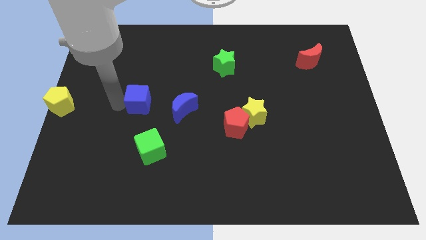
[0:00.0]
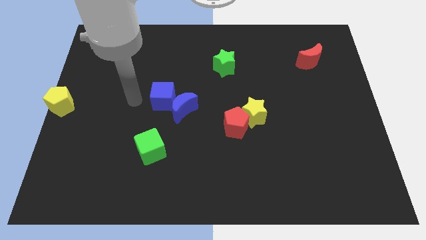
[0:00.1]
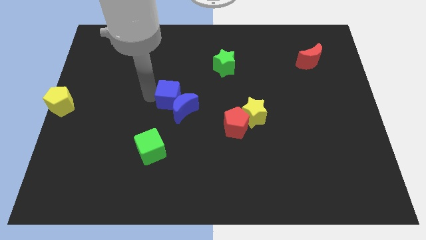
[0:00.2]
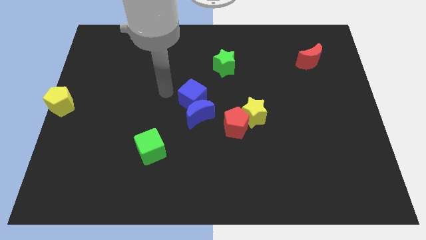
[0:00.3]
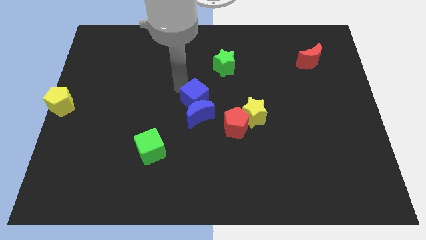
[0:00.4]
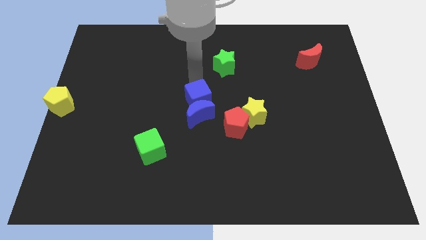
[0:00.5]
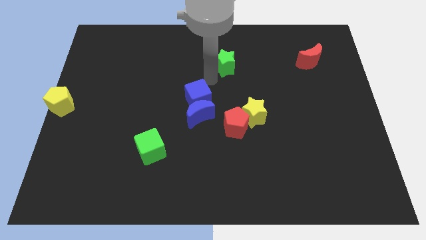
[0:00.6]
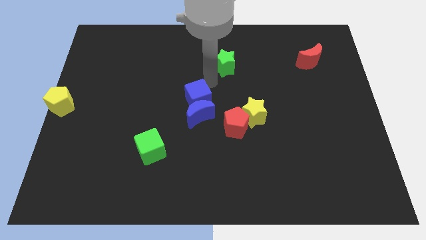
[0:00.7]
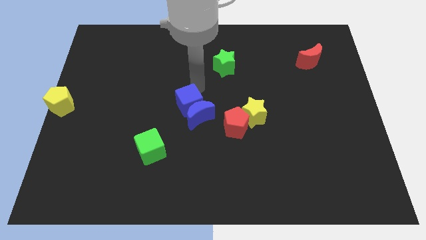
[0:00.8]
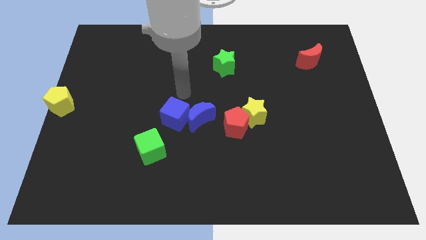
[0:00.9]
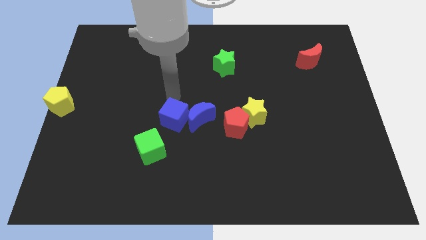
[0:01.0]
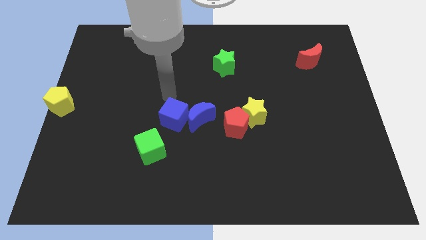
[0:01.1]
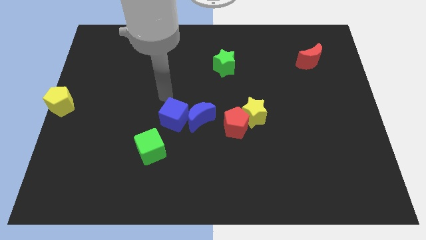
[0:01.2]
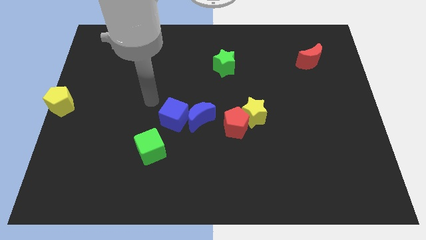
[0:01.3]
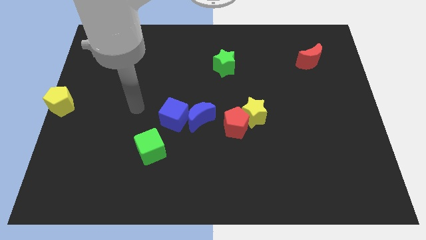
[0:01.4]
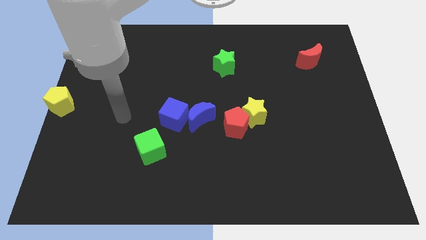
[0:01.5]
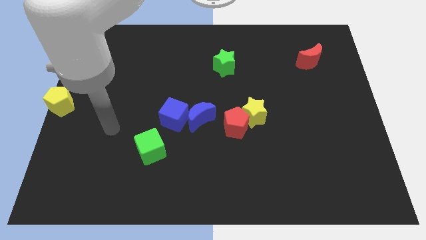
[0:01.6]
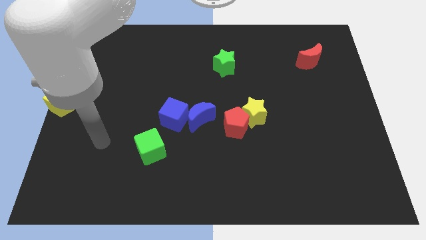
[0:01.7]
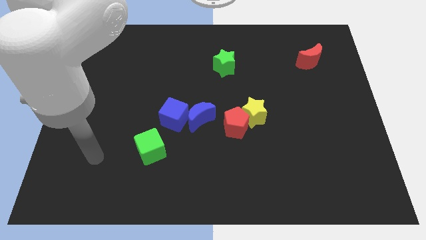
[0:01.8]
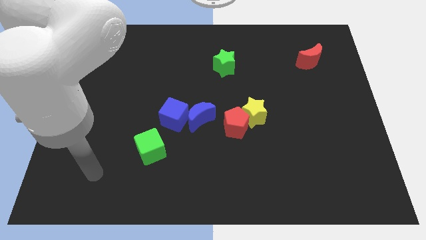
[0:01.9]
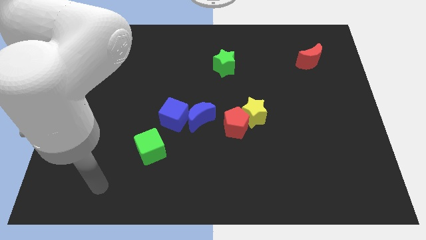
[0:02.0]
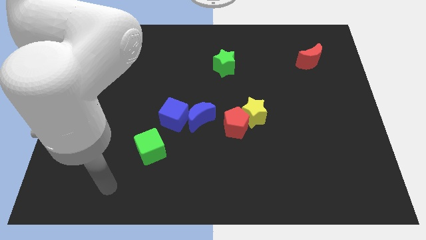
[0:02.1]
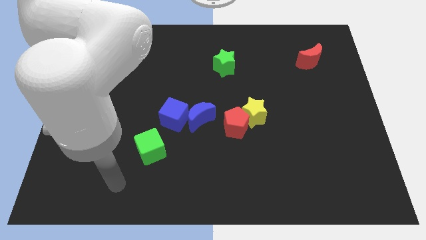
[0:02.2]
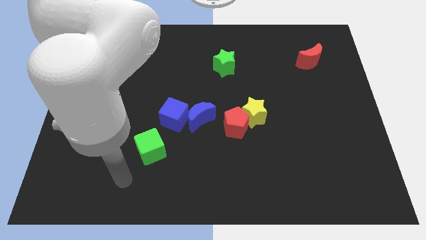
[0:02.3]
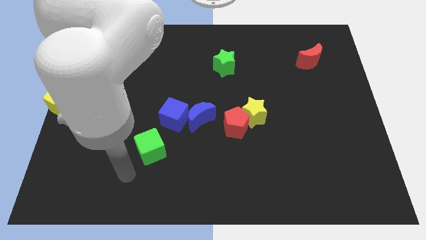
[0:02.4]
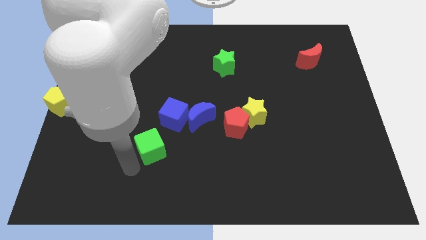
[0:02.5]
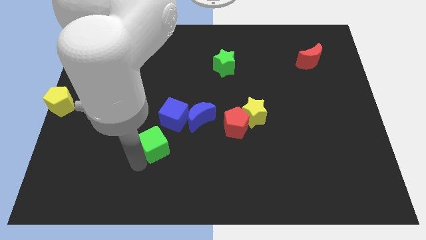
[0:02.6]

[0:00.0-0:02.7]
move the blue cube in between the blue crescent and green cube

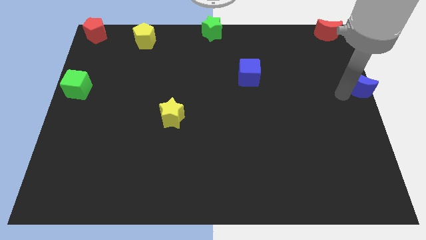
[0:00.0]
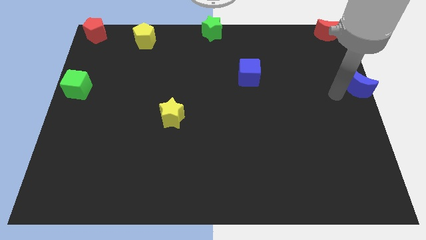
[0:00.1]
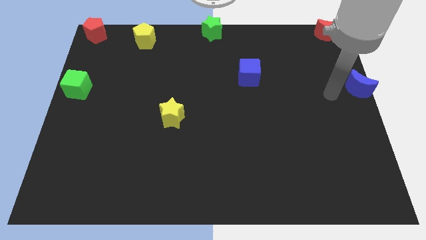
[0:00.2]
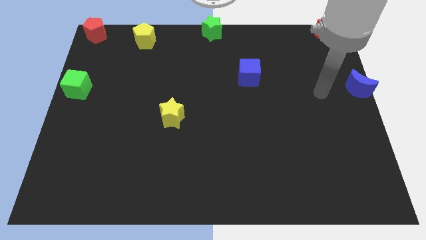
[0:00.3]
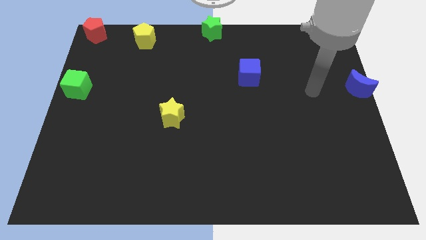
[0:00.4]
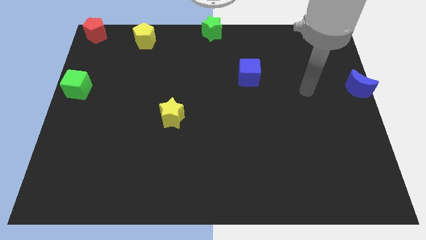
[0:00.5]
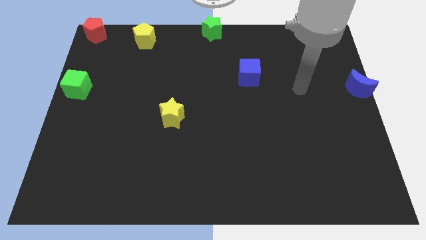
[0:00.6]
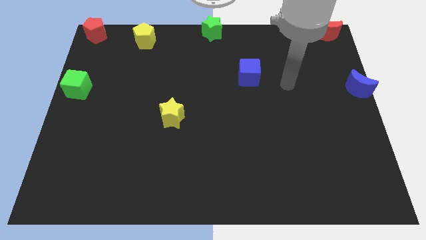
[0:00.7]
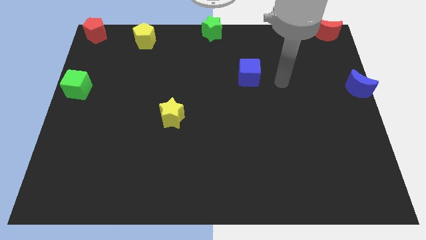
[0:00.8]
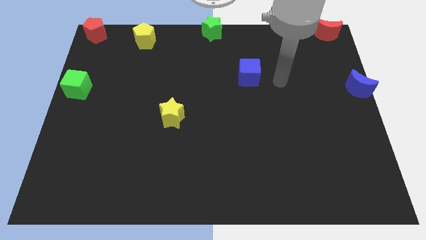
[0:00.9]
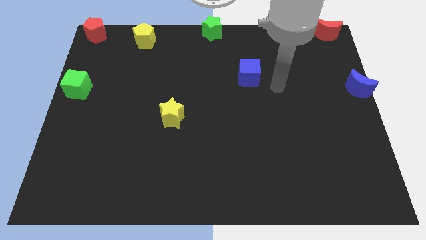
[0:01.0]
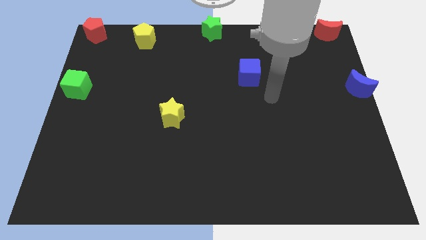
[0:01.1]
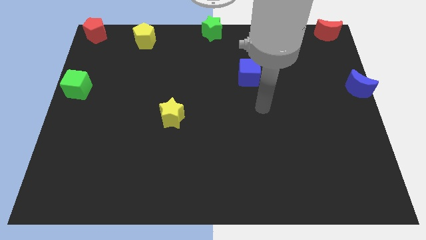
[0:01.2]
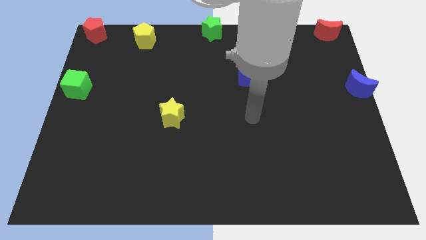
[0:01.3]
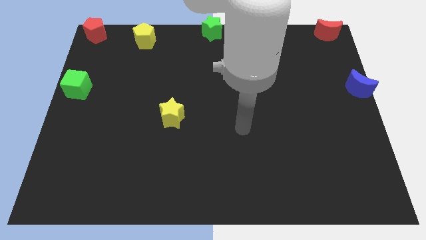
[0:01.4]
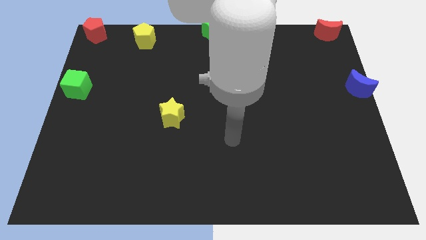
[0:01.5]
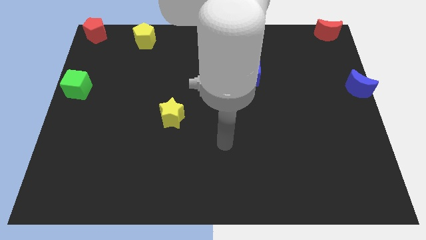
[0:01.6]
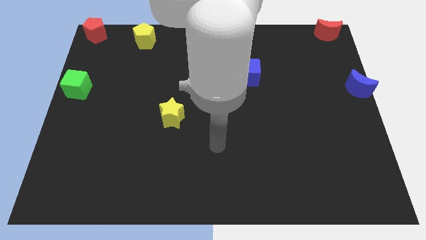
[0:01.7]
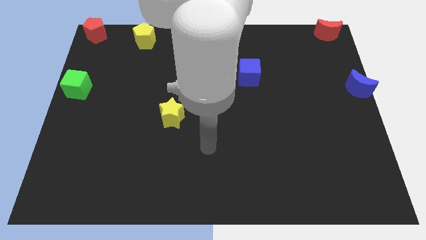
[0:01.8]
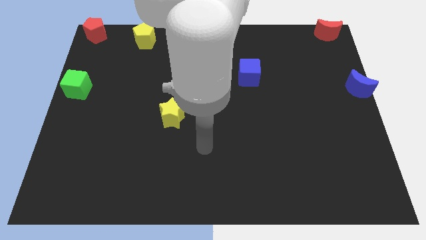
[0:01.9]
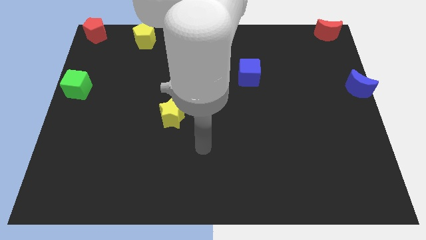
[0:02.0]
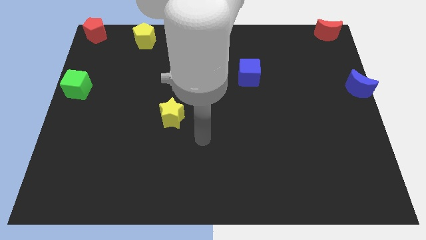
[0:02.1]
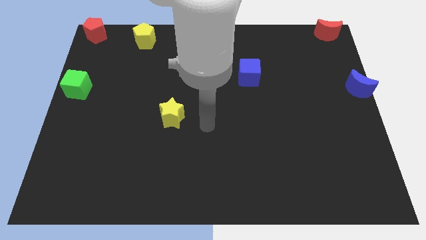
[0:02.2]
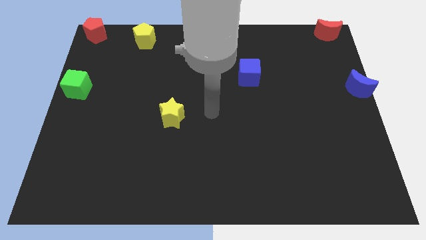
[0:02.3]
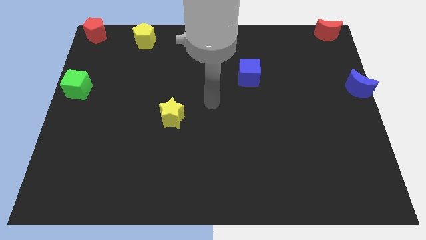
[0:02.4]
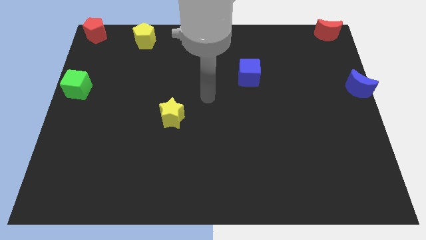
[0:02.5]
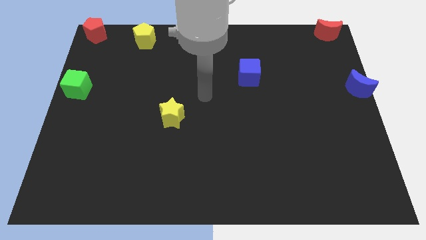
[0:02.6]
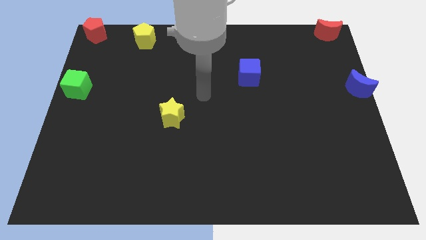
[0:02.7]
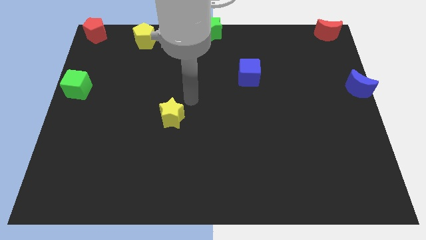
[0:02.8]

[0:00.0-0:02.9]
move your arm away from the blue moon

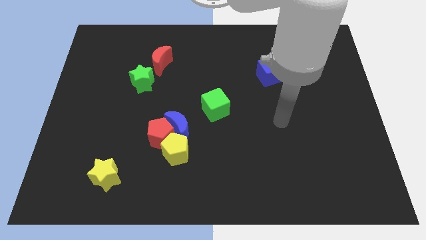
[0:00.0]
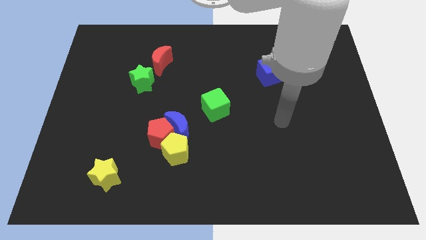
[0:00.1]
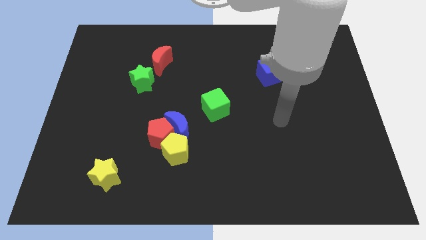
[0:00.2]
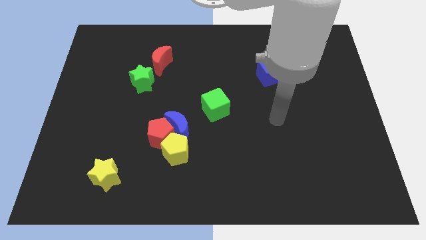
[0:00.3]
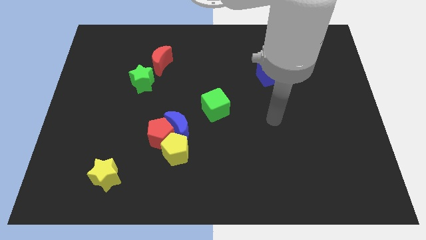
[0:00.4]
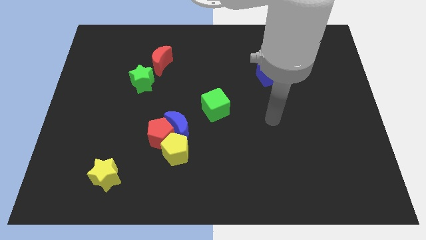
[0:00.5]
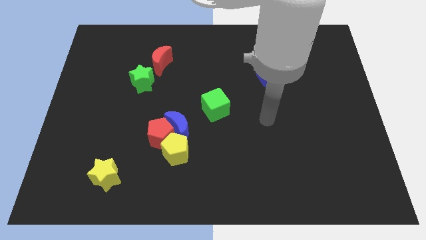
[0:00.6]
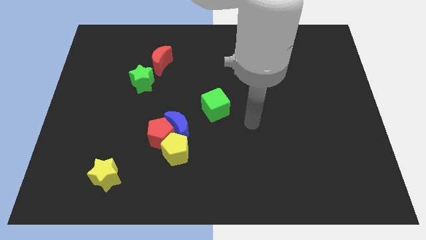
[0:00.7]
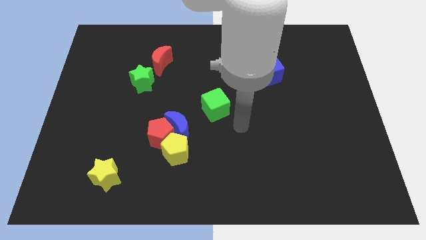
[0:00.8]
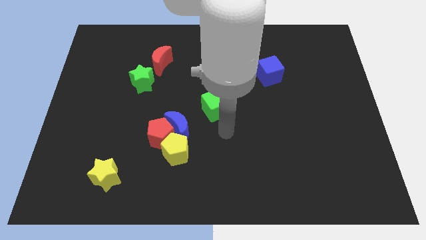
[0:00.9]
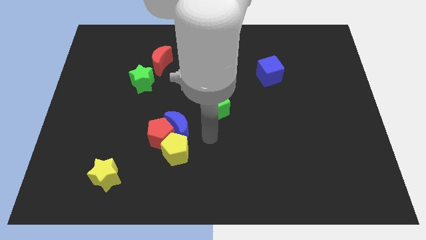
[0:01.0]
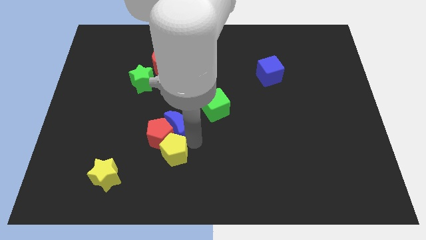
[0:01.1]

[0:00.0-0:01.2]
put your arm parallel right to the yellow pentagon

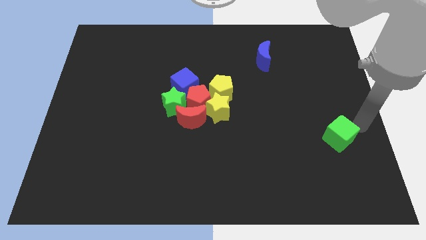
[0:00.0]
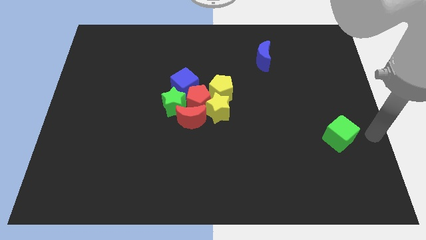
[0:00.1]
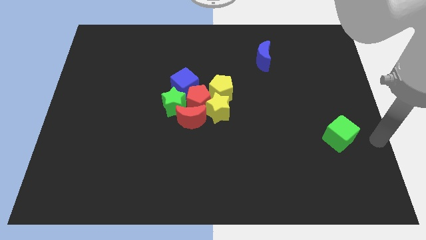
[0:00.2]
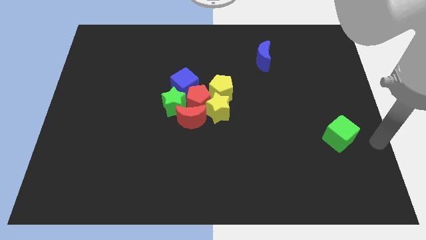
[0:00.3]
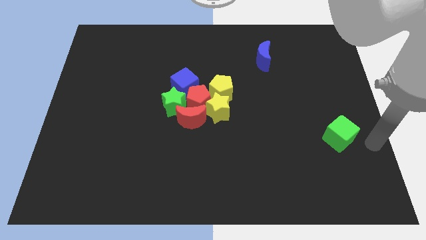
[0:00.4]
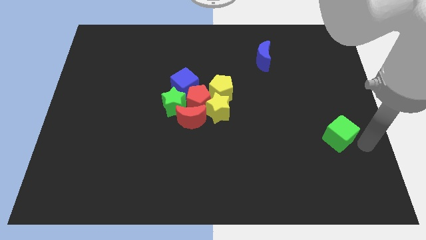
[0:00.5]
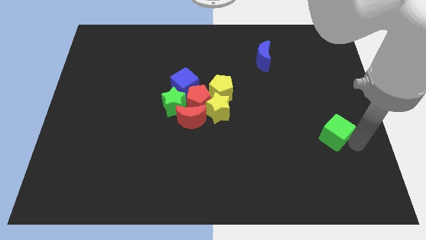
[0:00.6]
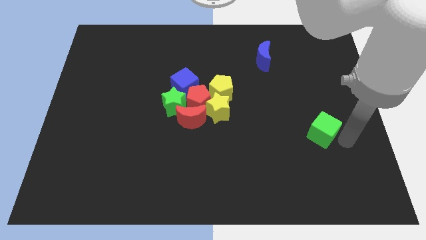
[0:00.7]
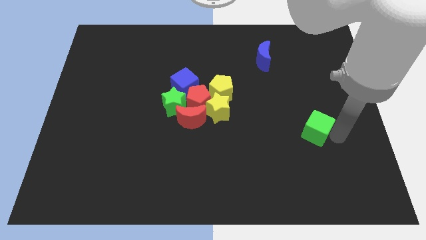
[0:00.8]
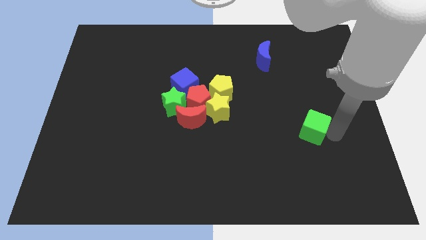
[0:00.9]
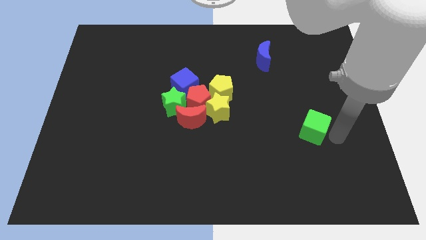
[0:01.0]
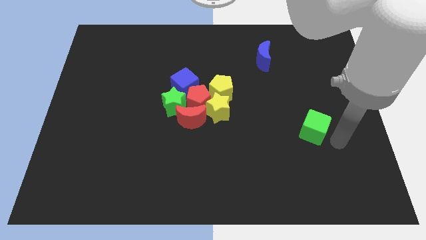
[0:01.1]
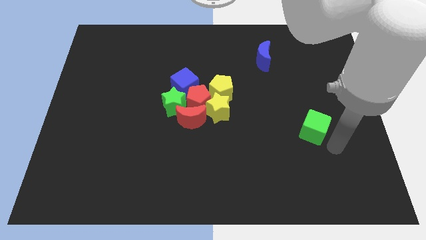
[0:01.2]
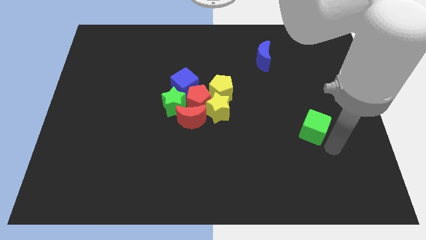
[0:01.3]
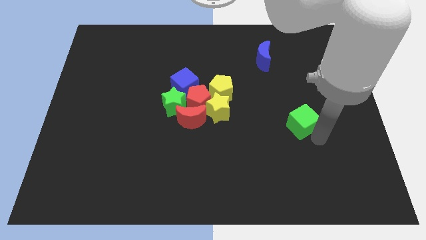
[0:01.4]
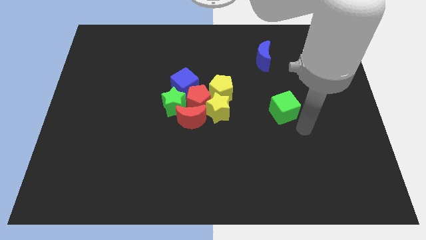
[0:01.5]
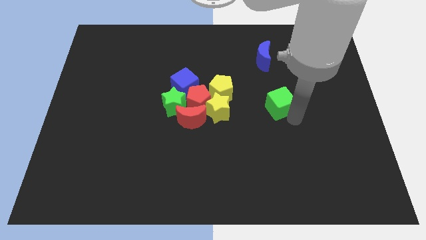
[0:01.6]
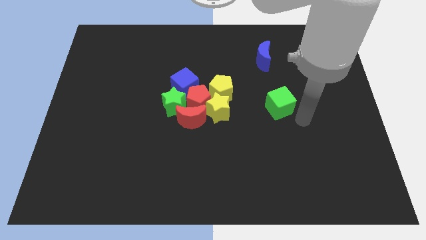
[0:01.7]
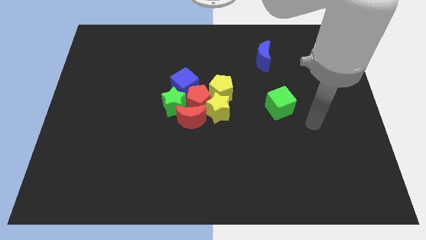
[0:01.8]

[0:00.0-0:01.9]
push the green cube towards the center of the board

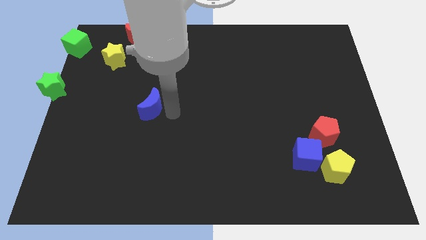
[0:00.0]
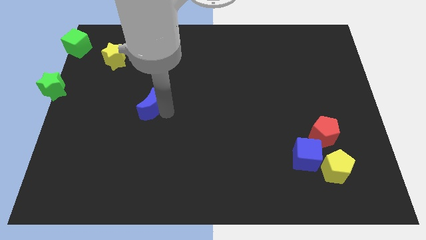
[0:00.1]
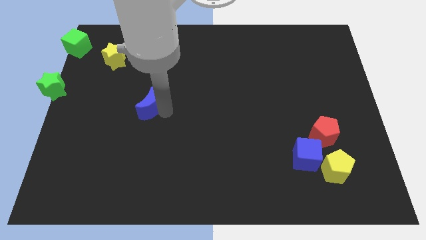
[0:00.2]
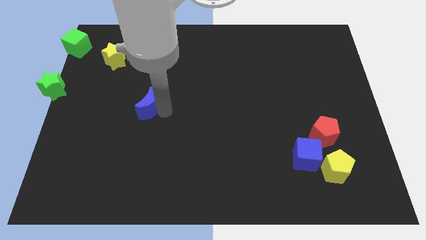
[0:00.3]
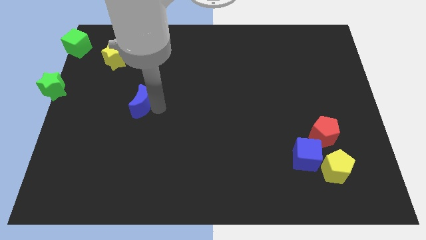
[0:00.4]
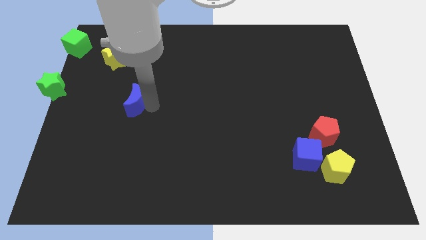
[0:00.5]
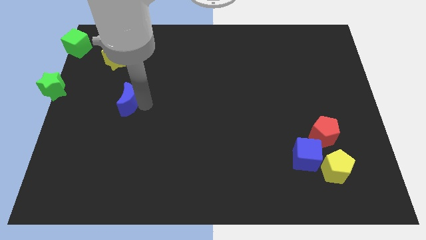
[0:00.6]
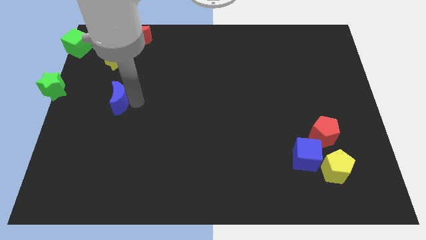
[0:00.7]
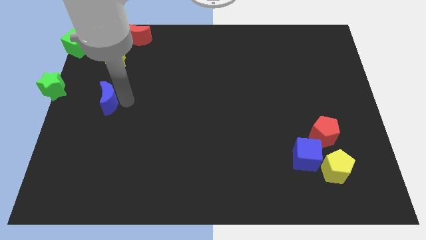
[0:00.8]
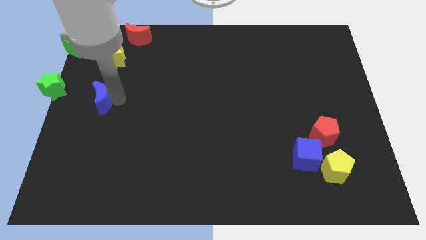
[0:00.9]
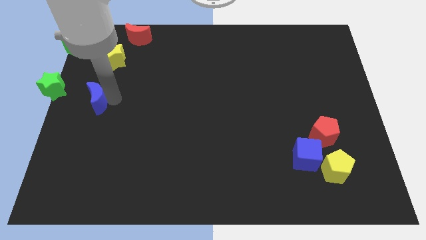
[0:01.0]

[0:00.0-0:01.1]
move blue moon below yellow star
